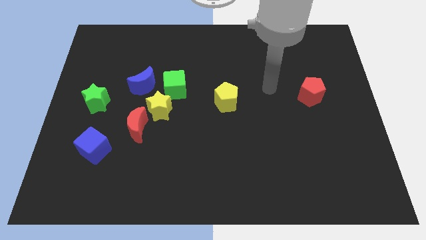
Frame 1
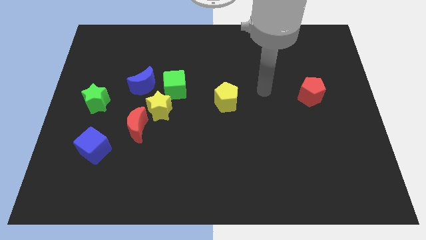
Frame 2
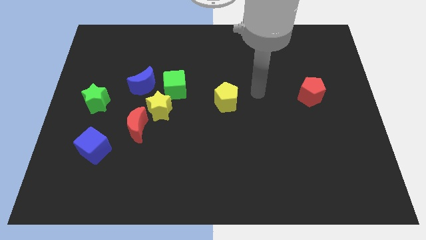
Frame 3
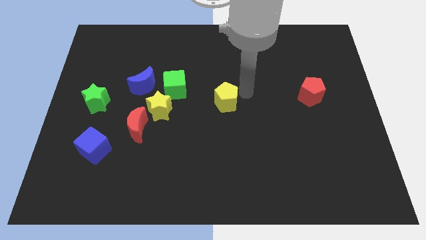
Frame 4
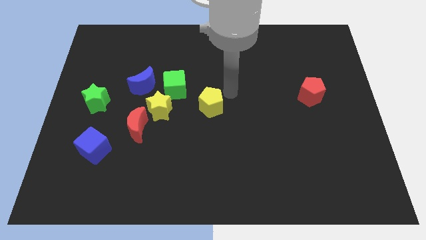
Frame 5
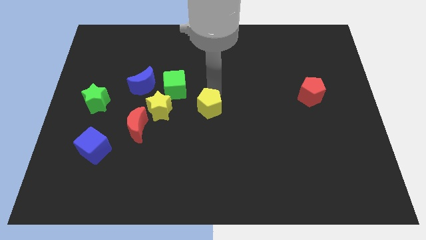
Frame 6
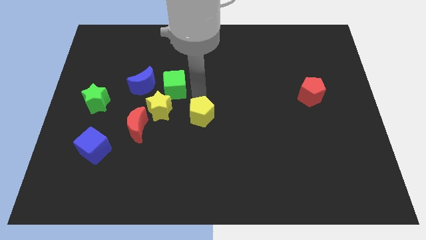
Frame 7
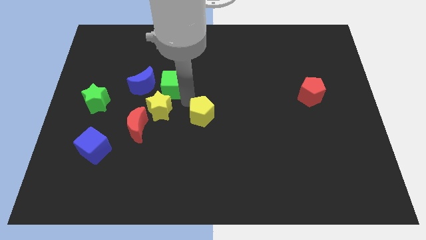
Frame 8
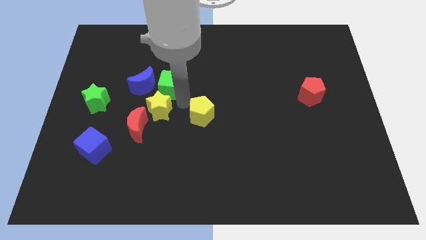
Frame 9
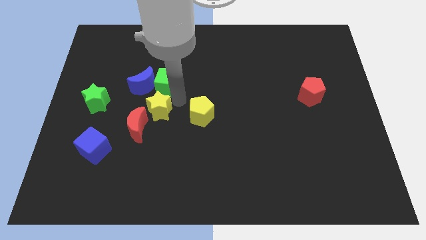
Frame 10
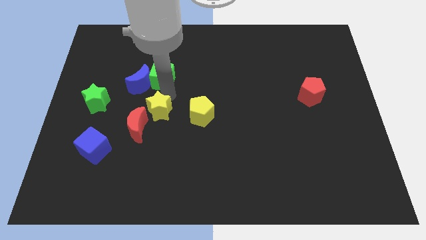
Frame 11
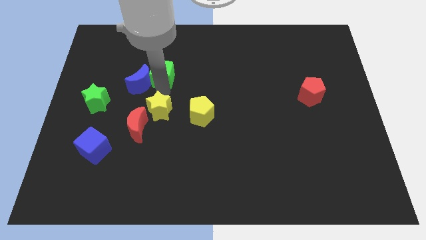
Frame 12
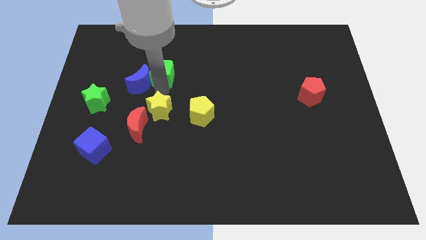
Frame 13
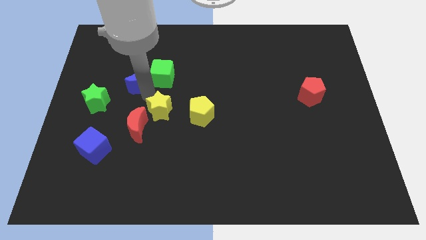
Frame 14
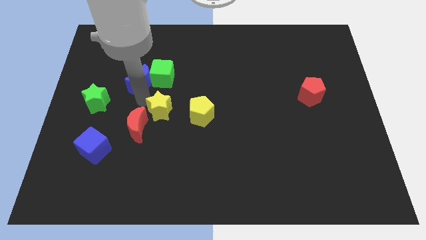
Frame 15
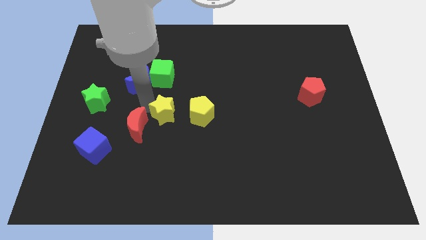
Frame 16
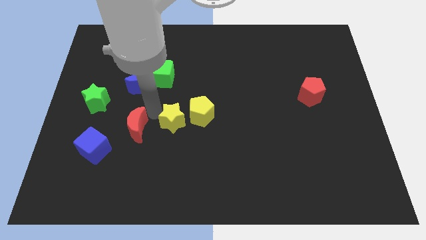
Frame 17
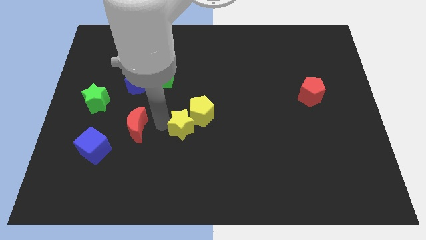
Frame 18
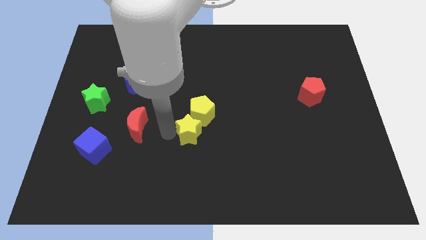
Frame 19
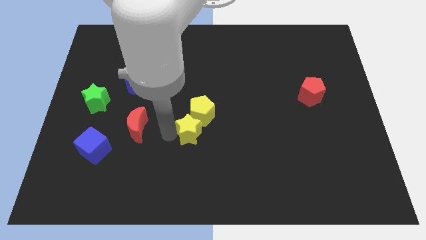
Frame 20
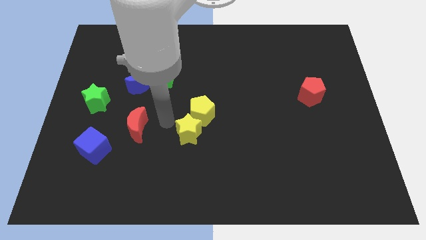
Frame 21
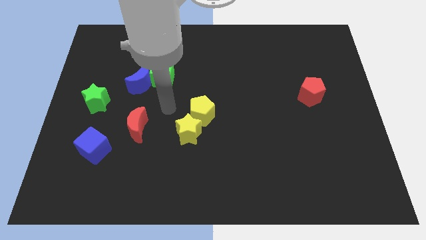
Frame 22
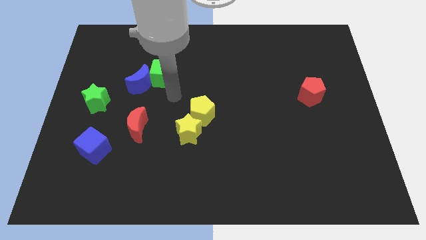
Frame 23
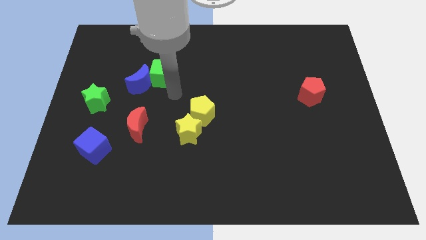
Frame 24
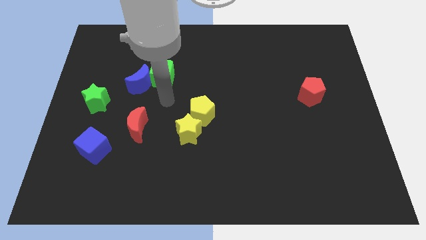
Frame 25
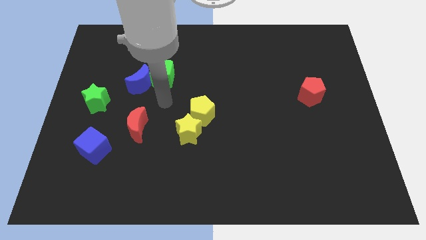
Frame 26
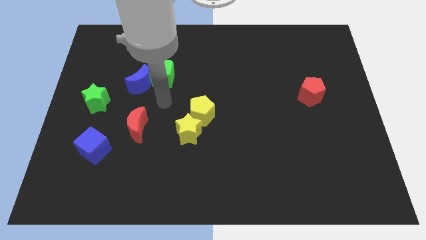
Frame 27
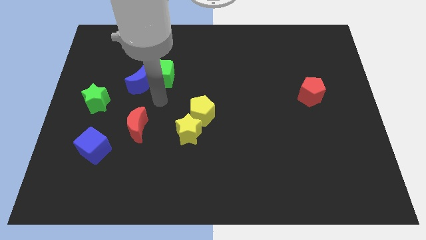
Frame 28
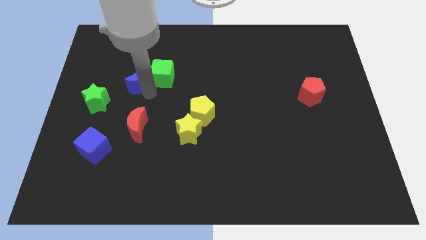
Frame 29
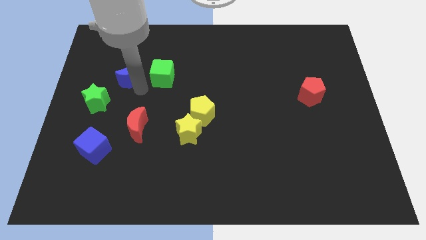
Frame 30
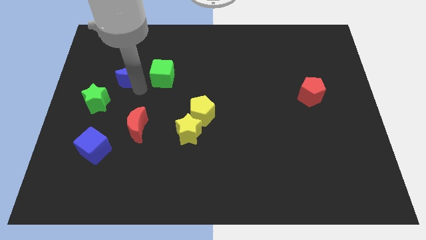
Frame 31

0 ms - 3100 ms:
move the yellow star parallel to the right of the red crescent

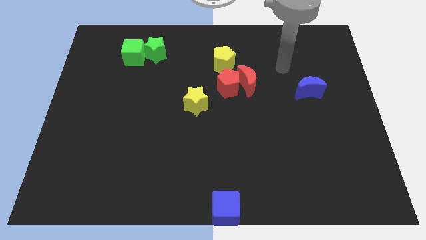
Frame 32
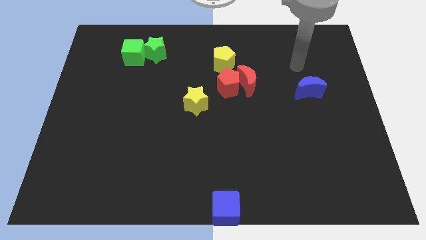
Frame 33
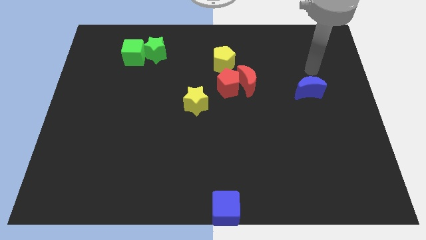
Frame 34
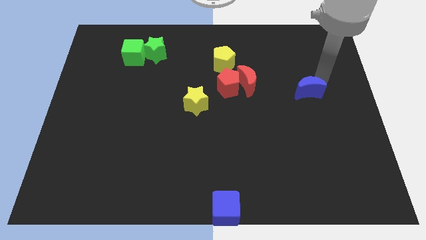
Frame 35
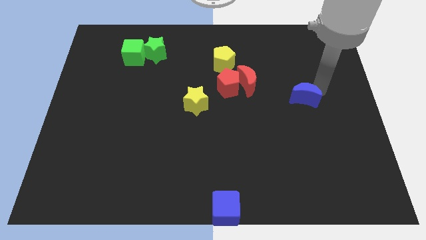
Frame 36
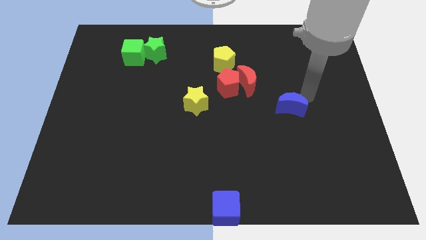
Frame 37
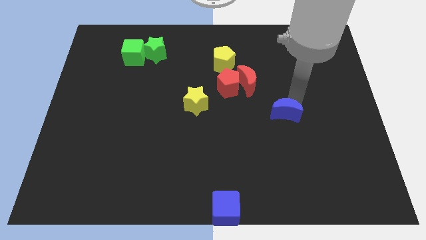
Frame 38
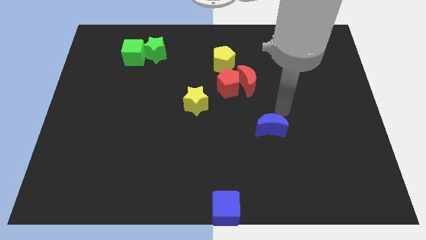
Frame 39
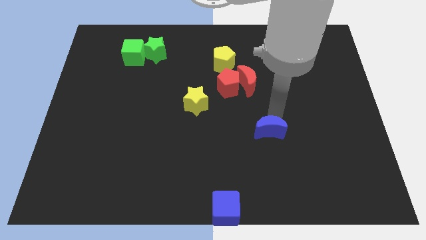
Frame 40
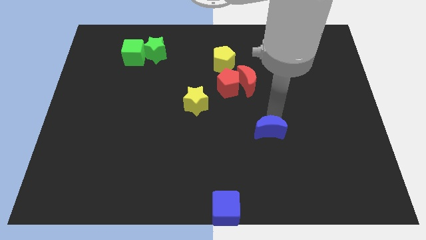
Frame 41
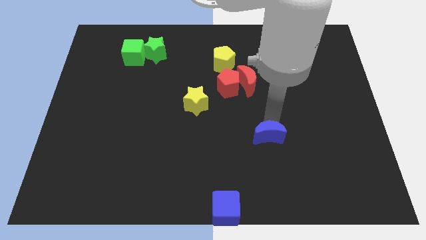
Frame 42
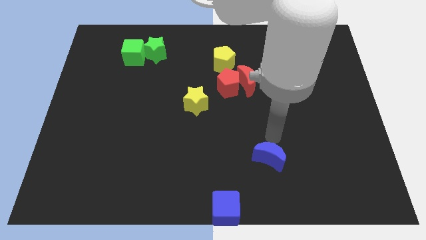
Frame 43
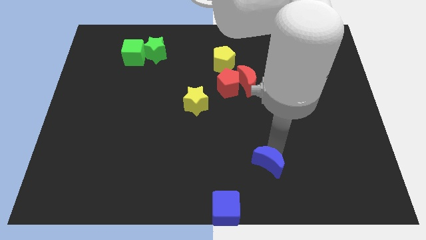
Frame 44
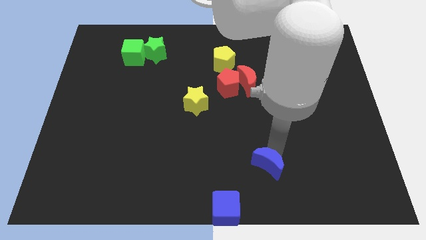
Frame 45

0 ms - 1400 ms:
move blue crescent below red crescent

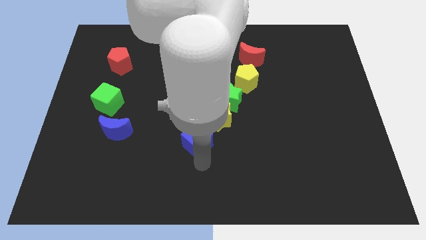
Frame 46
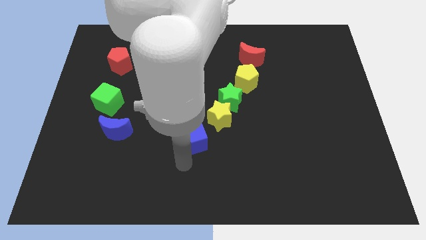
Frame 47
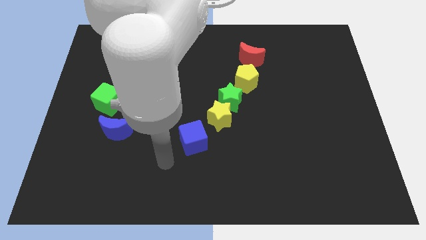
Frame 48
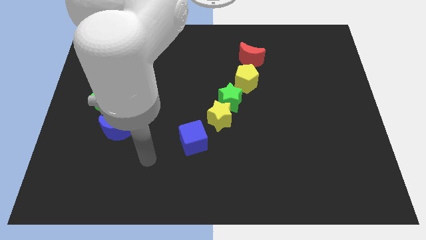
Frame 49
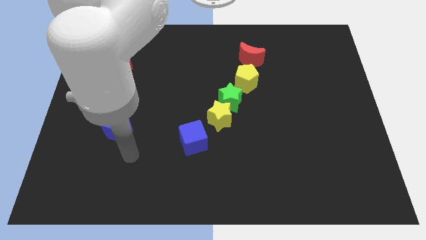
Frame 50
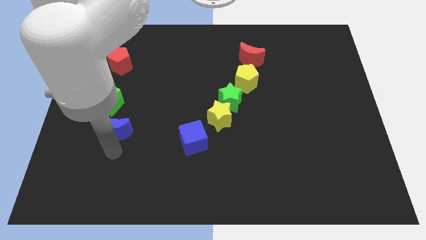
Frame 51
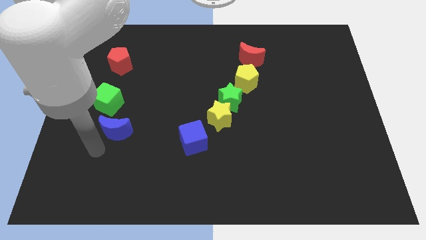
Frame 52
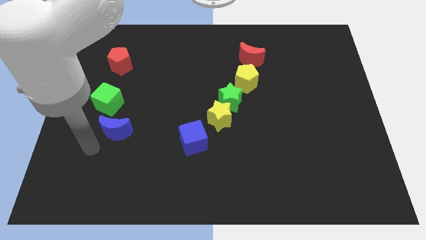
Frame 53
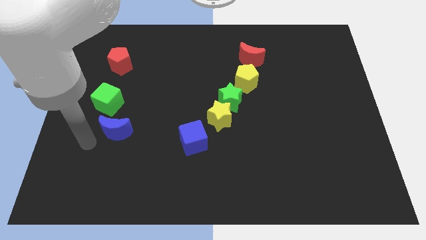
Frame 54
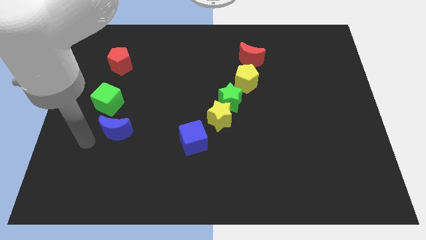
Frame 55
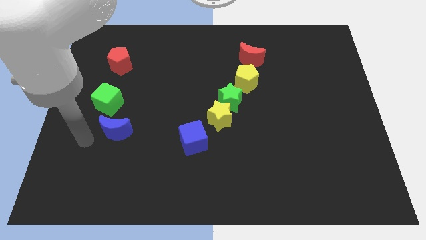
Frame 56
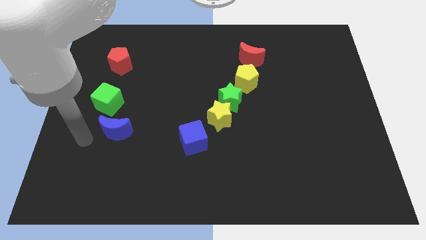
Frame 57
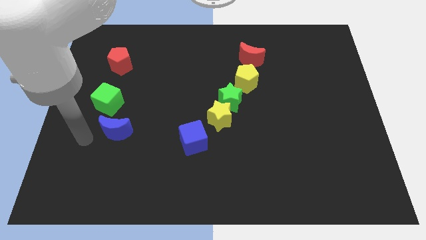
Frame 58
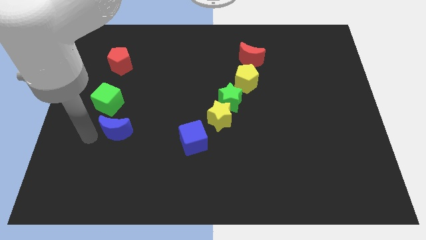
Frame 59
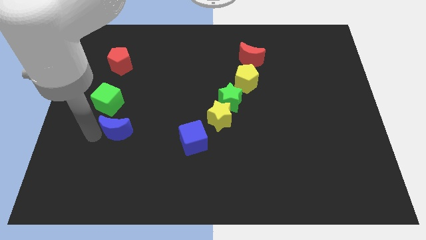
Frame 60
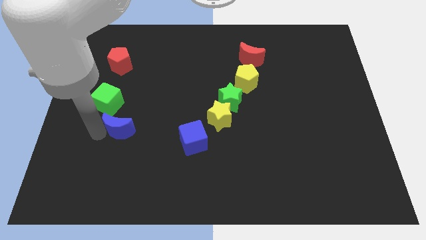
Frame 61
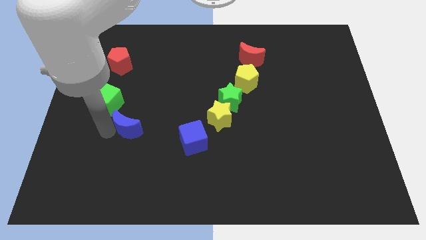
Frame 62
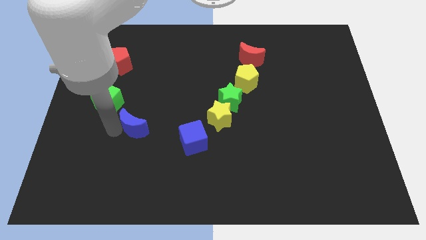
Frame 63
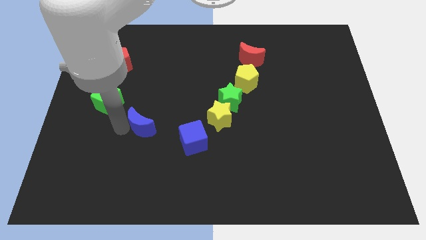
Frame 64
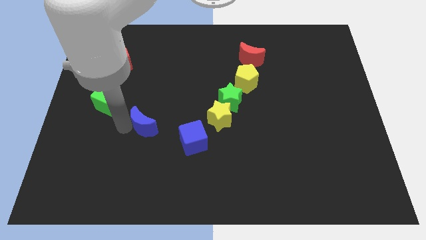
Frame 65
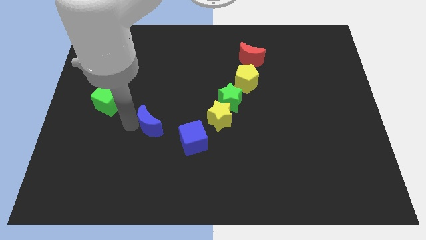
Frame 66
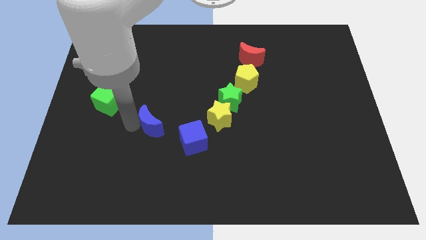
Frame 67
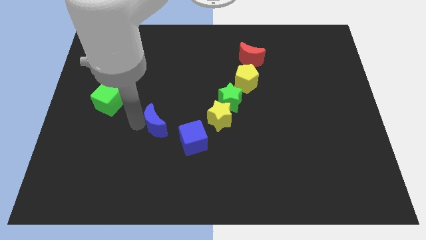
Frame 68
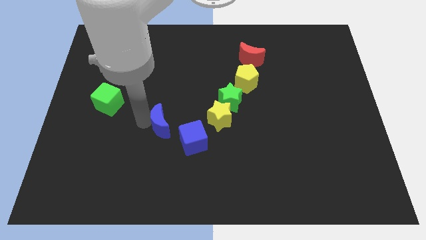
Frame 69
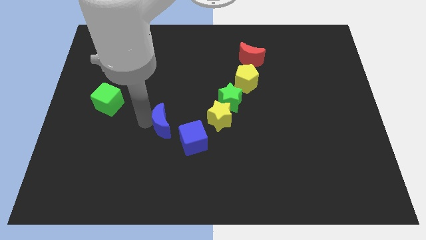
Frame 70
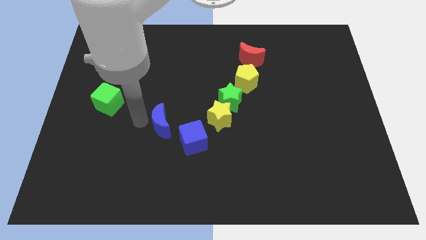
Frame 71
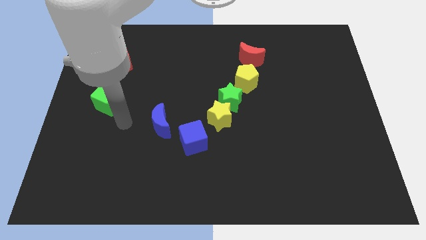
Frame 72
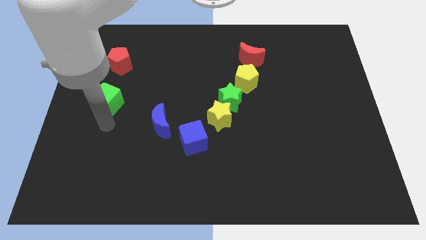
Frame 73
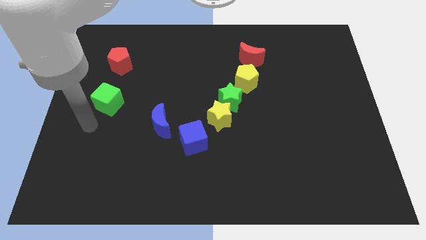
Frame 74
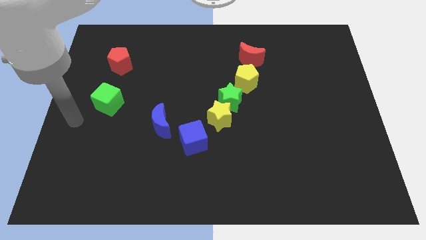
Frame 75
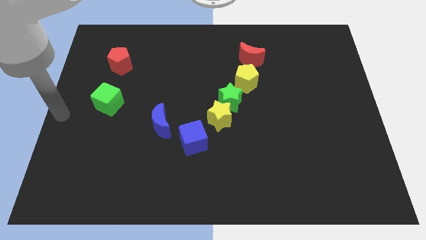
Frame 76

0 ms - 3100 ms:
place the blue moon at the top left side of blue cube

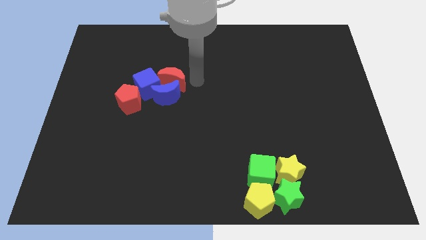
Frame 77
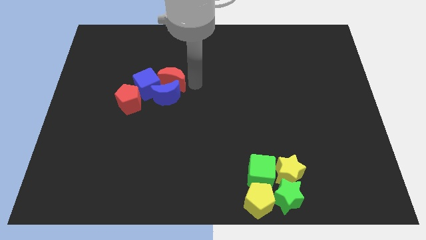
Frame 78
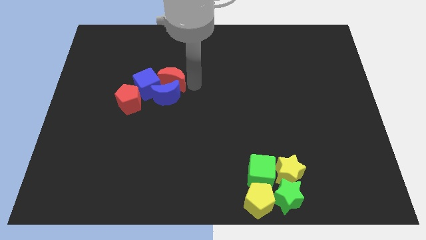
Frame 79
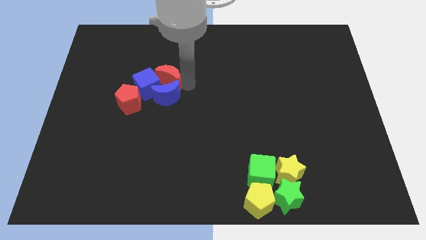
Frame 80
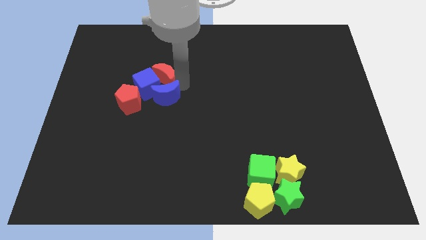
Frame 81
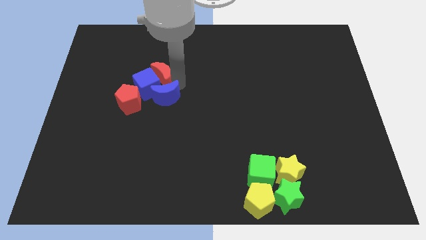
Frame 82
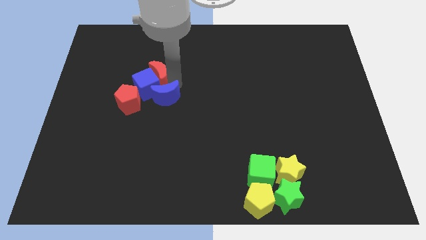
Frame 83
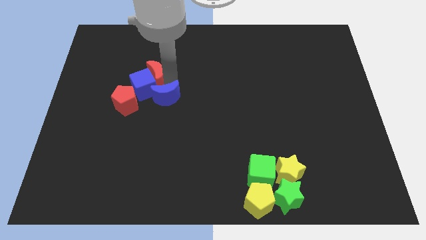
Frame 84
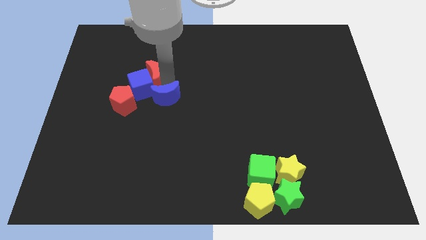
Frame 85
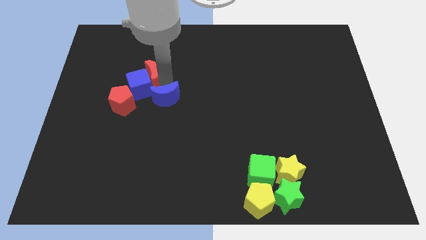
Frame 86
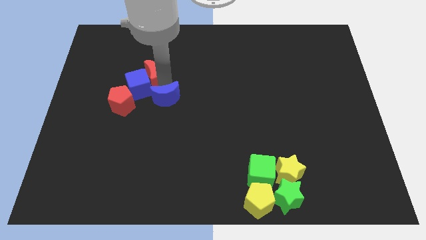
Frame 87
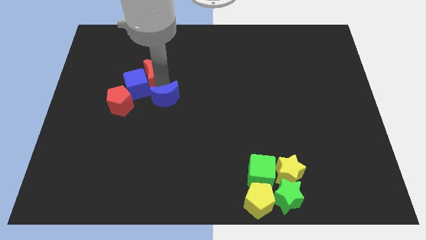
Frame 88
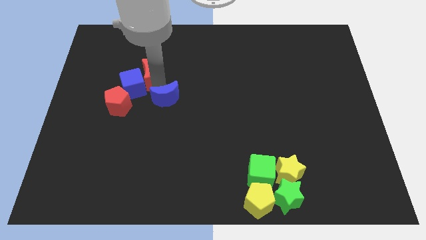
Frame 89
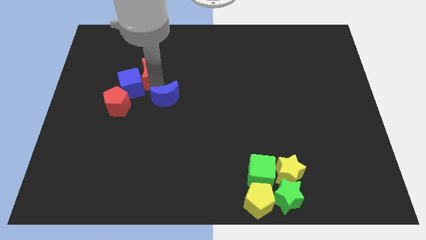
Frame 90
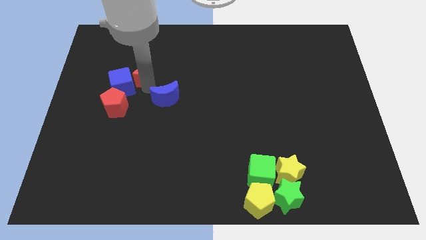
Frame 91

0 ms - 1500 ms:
push a group of blocks towards the left side of the board
